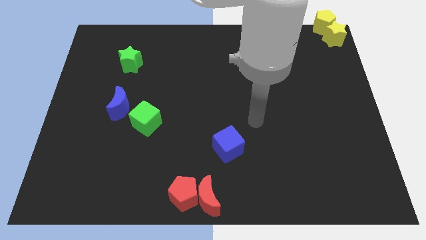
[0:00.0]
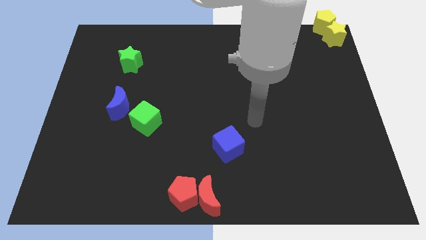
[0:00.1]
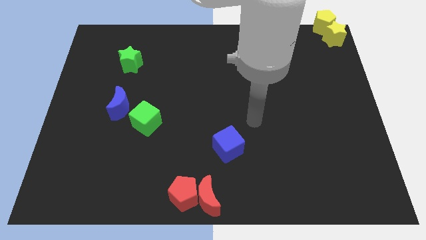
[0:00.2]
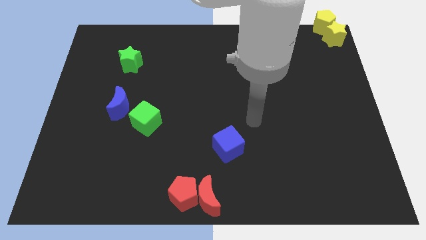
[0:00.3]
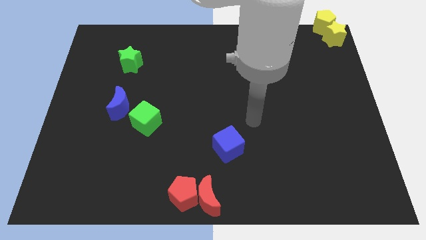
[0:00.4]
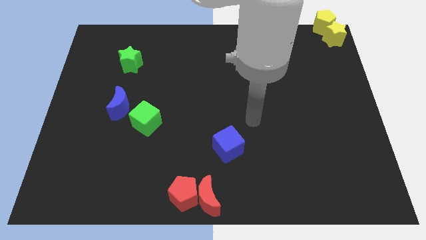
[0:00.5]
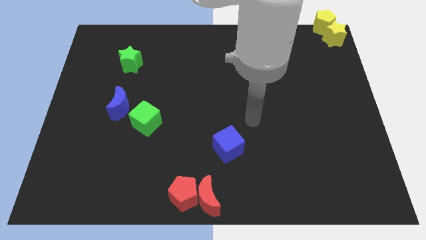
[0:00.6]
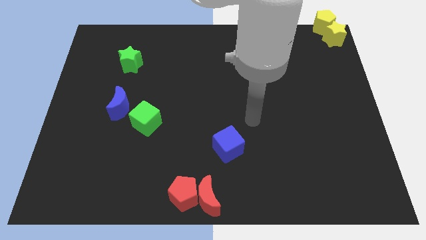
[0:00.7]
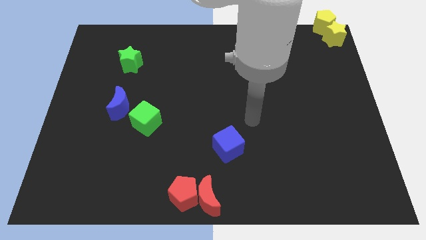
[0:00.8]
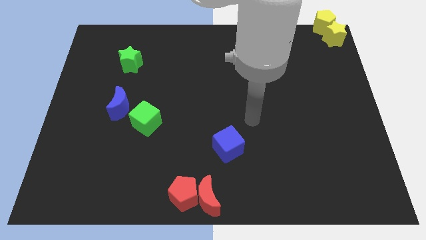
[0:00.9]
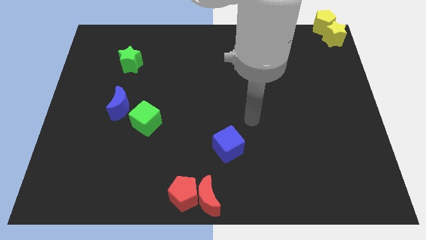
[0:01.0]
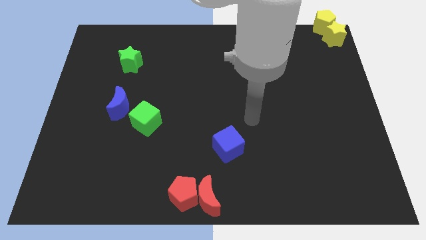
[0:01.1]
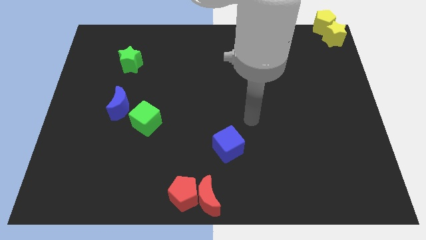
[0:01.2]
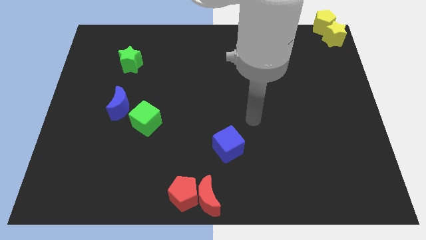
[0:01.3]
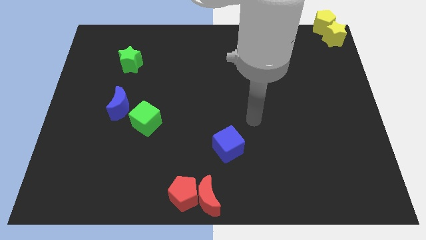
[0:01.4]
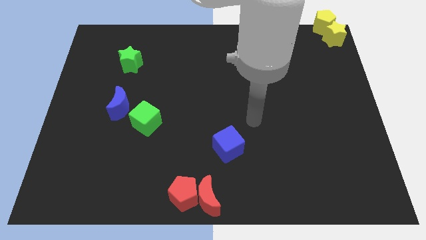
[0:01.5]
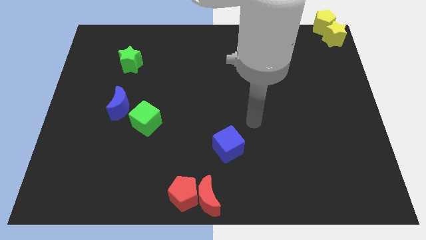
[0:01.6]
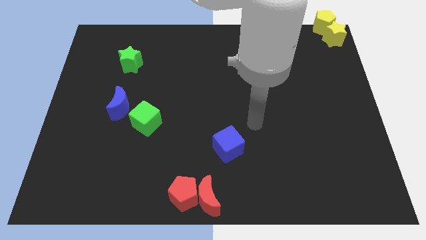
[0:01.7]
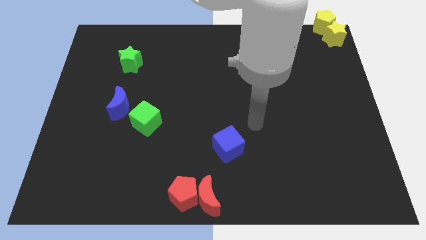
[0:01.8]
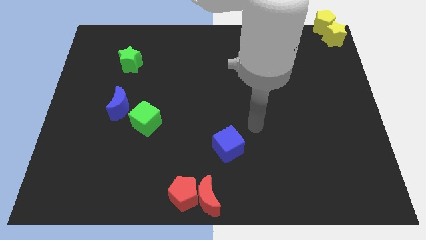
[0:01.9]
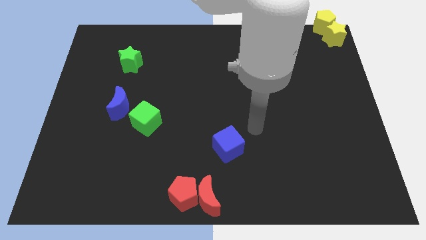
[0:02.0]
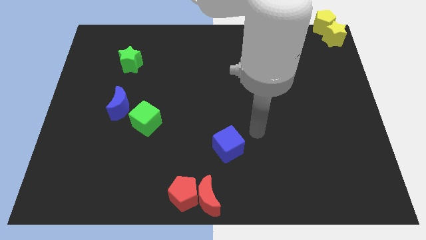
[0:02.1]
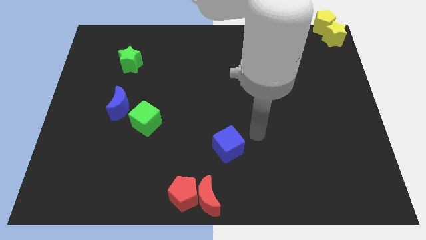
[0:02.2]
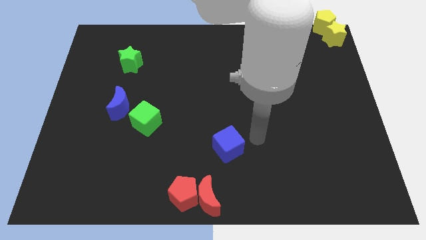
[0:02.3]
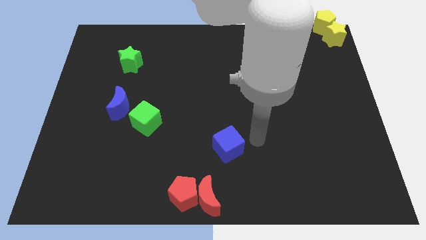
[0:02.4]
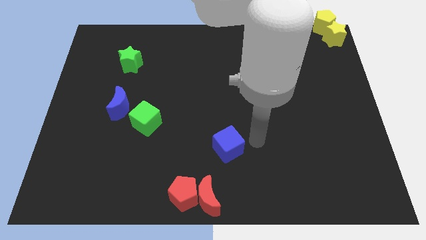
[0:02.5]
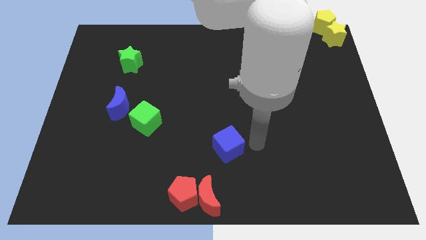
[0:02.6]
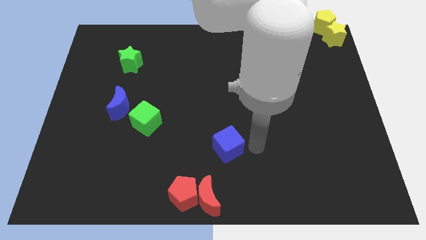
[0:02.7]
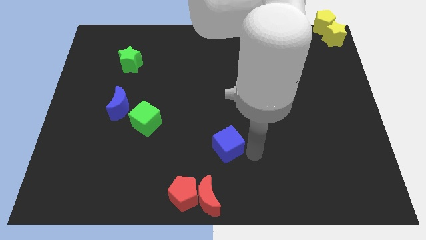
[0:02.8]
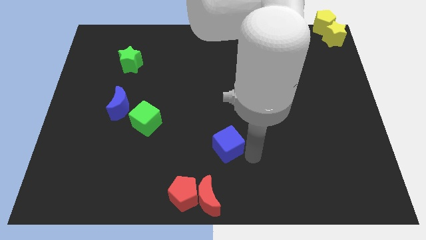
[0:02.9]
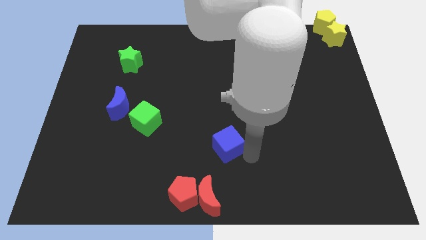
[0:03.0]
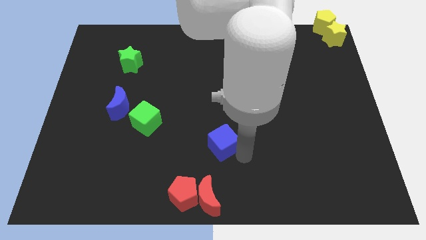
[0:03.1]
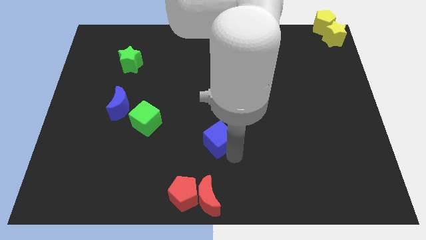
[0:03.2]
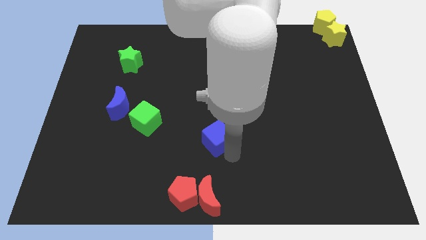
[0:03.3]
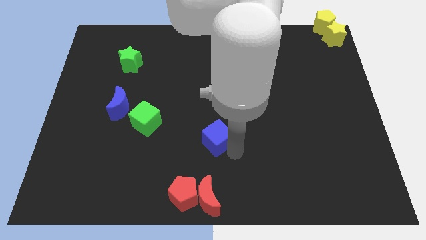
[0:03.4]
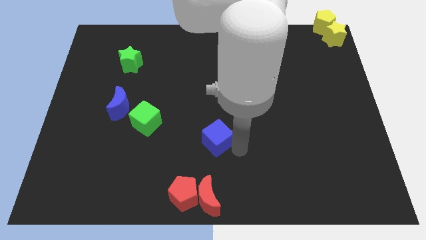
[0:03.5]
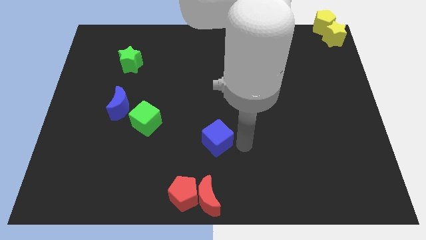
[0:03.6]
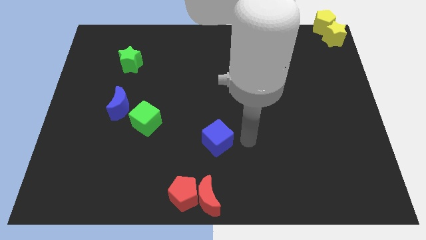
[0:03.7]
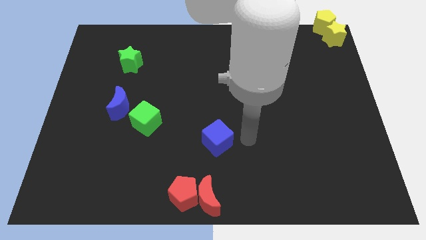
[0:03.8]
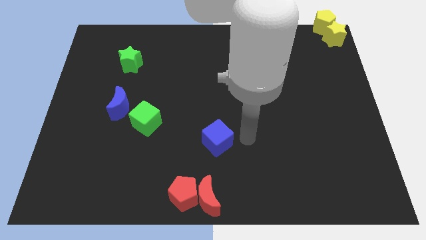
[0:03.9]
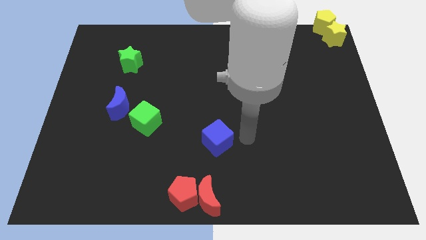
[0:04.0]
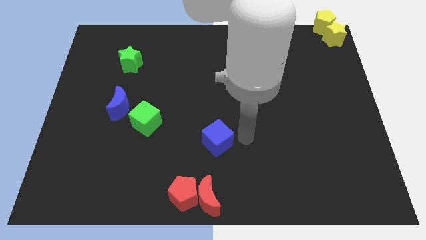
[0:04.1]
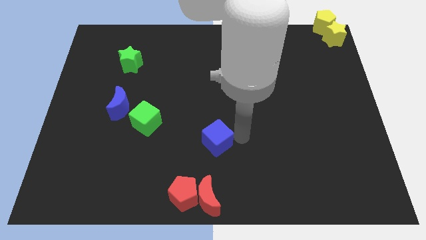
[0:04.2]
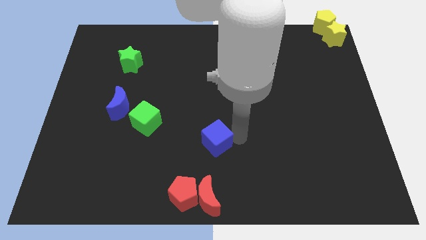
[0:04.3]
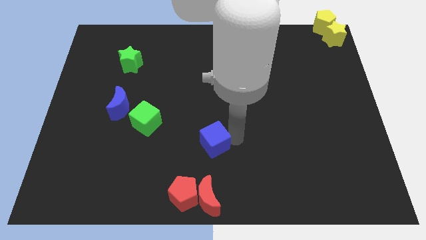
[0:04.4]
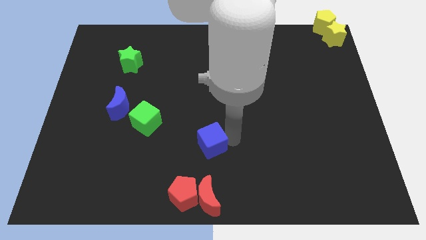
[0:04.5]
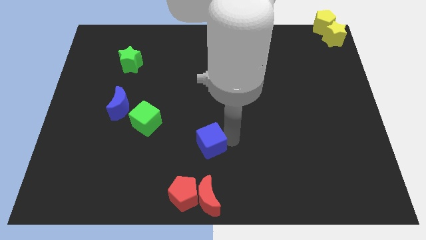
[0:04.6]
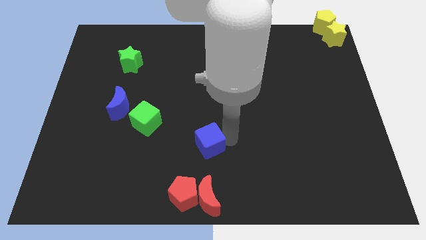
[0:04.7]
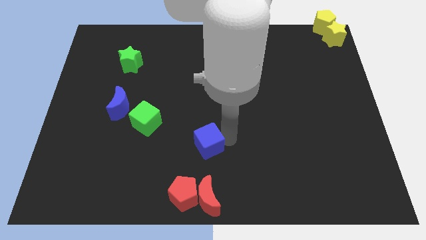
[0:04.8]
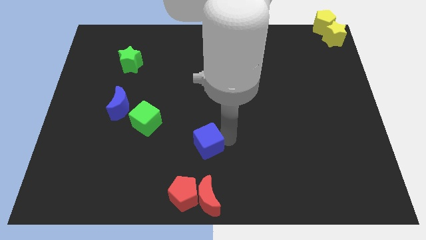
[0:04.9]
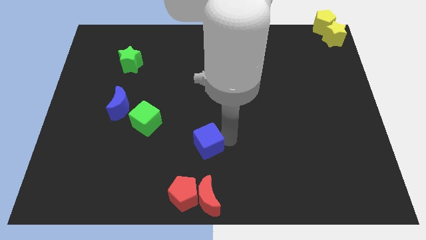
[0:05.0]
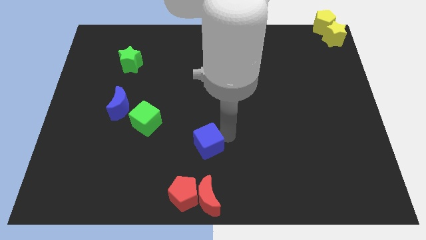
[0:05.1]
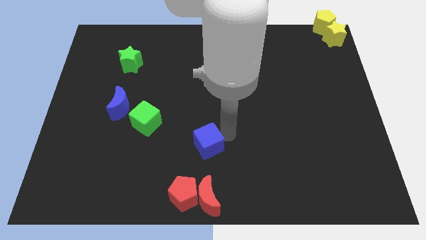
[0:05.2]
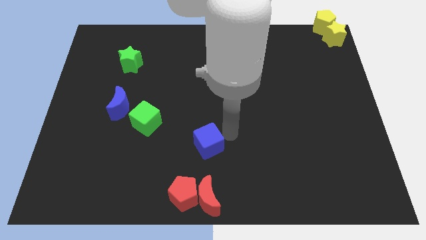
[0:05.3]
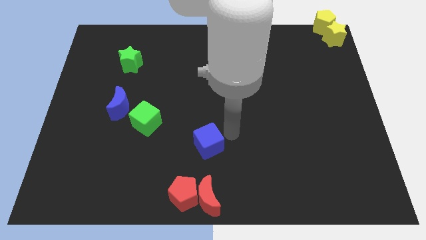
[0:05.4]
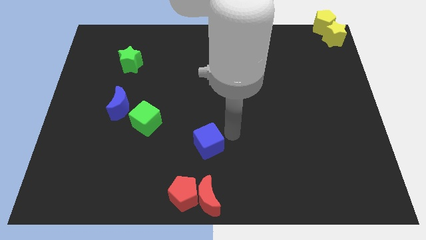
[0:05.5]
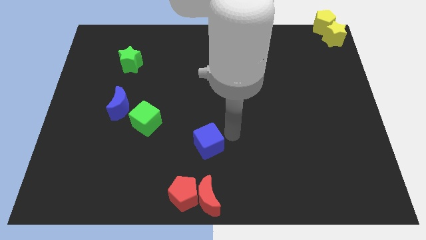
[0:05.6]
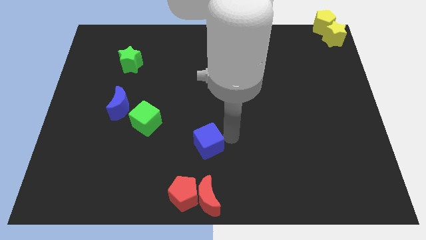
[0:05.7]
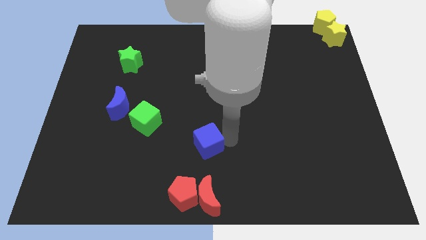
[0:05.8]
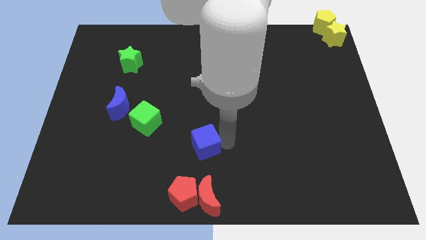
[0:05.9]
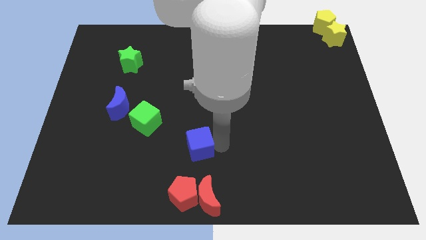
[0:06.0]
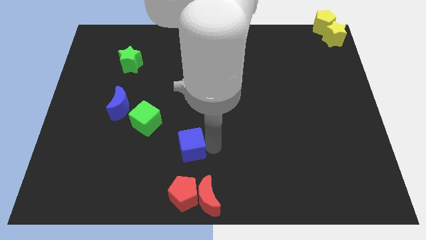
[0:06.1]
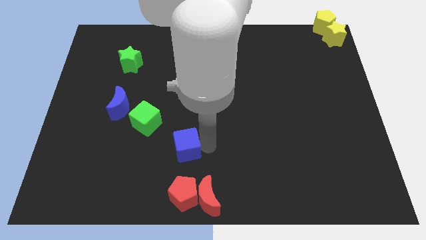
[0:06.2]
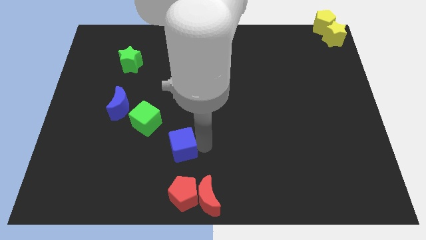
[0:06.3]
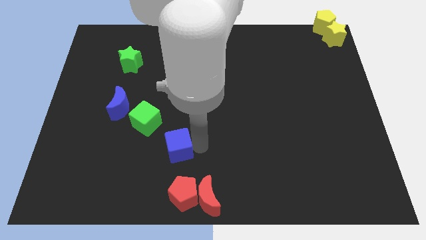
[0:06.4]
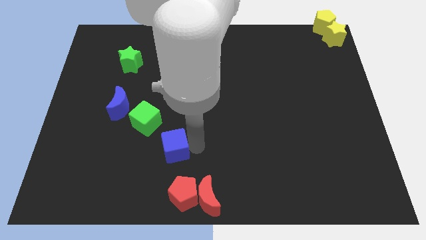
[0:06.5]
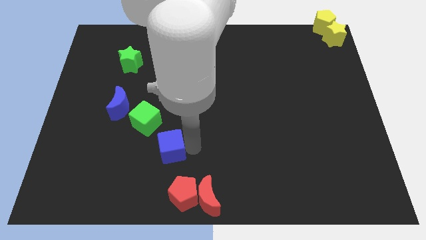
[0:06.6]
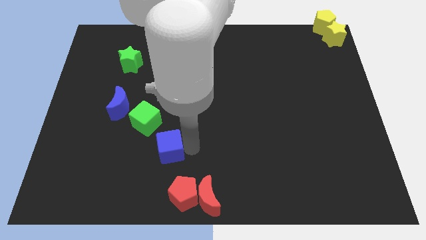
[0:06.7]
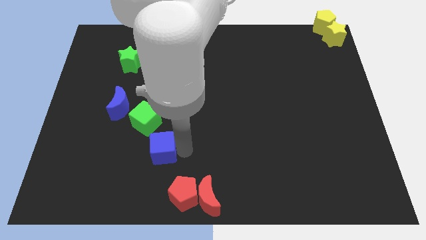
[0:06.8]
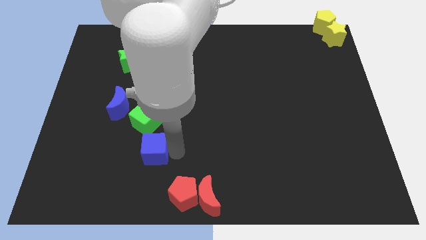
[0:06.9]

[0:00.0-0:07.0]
slide the blue cube to the bottom side of the green cube

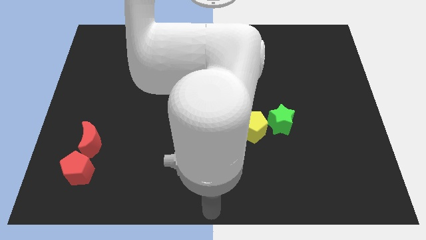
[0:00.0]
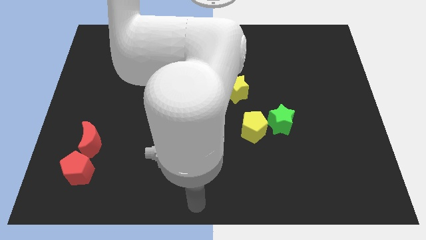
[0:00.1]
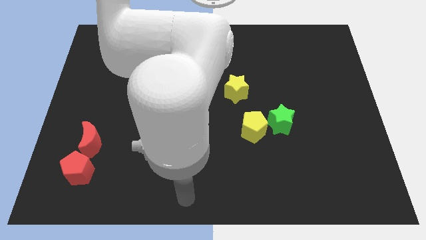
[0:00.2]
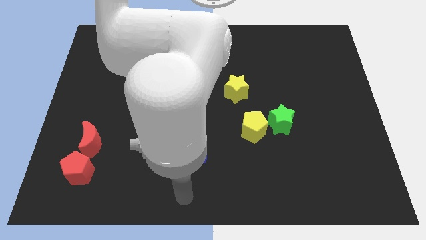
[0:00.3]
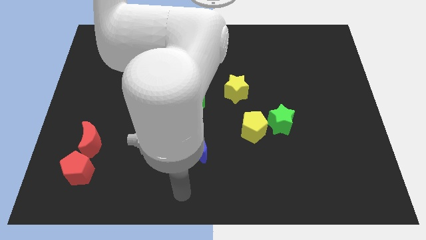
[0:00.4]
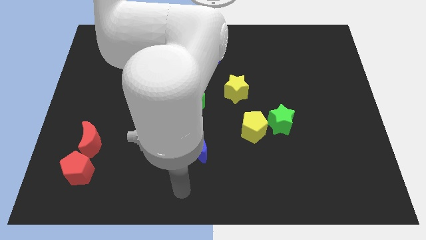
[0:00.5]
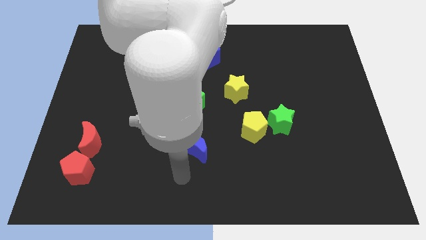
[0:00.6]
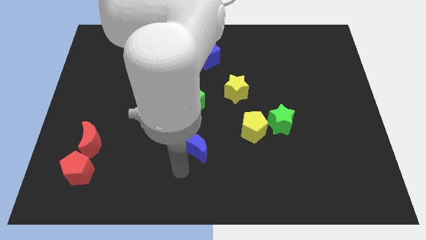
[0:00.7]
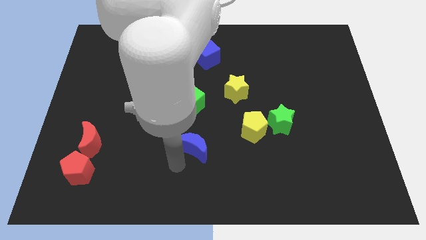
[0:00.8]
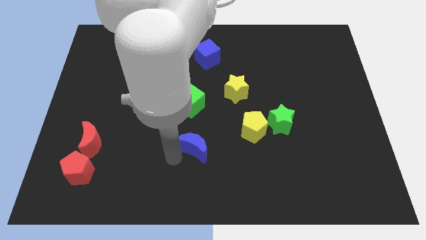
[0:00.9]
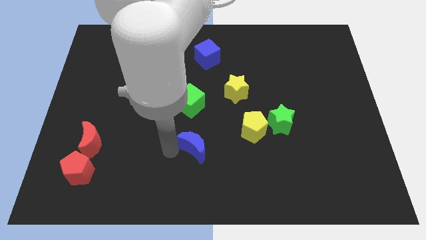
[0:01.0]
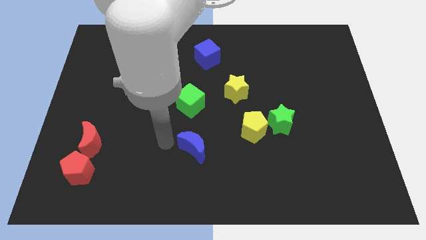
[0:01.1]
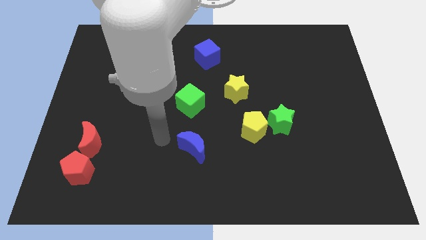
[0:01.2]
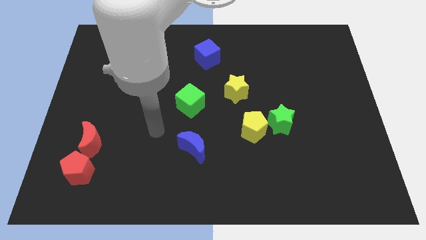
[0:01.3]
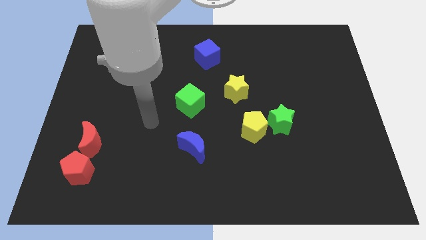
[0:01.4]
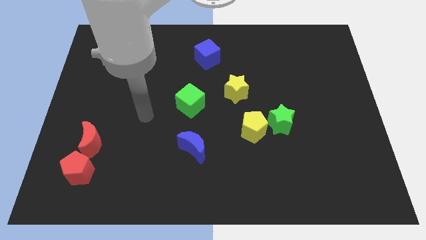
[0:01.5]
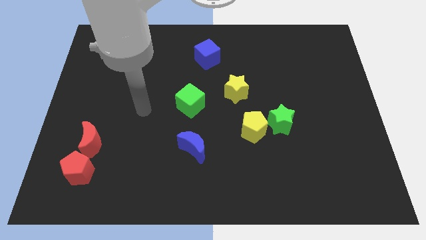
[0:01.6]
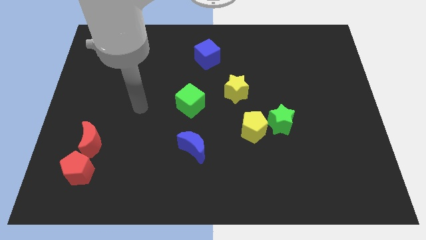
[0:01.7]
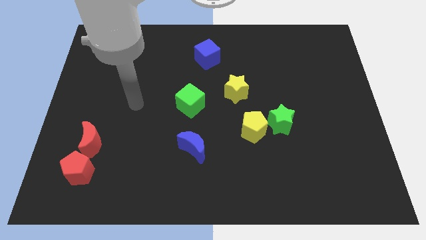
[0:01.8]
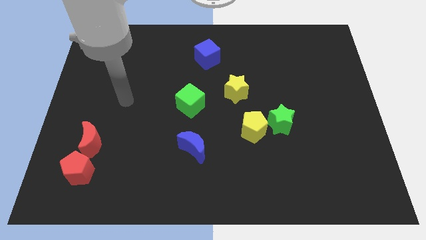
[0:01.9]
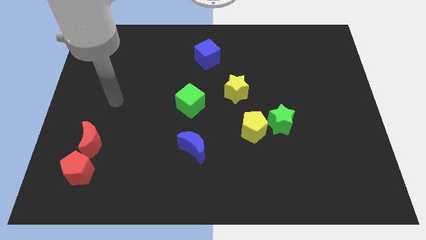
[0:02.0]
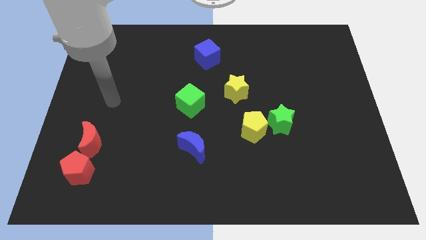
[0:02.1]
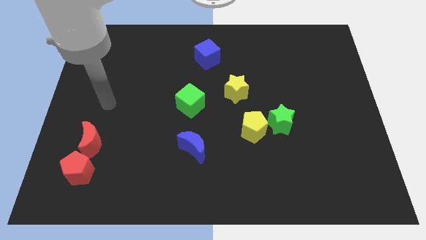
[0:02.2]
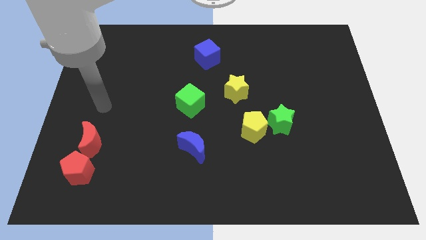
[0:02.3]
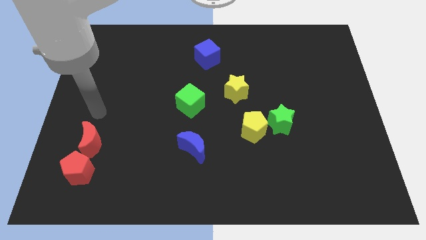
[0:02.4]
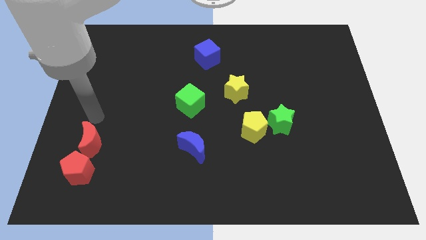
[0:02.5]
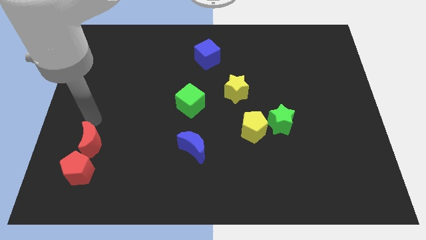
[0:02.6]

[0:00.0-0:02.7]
slightly touch left to the blue moon
